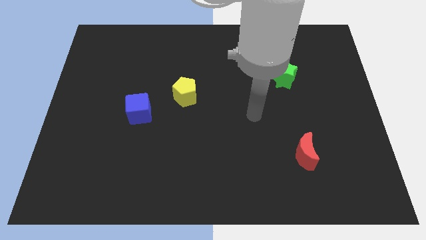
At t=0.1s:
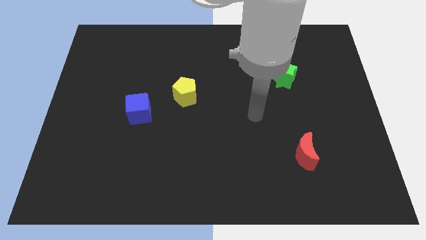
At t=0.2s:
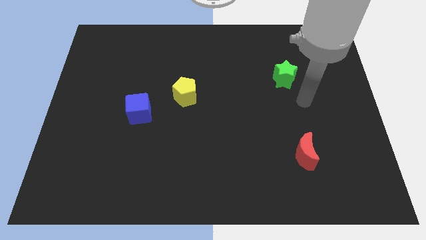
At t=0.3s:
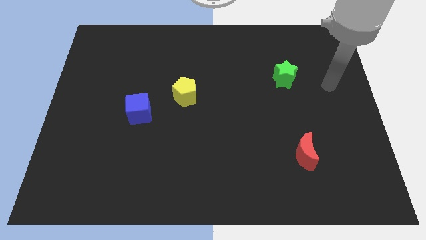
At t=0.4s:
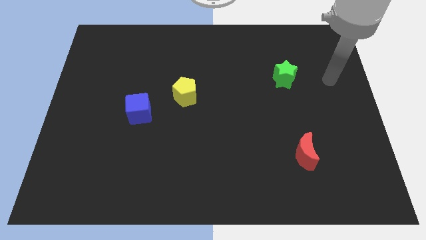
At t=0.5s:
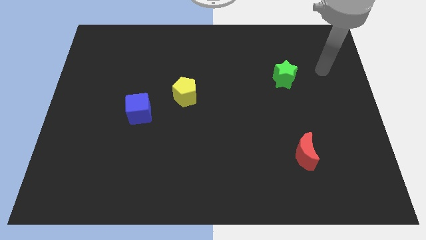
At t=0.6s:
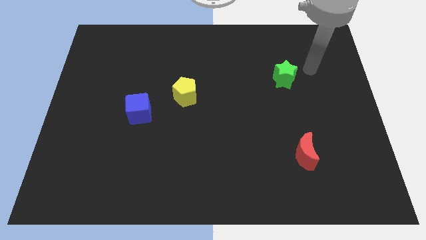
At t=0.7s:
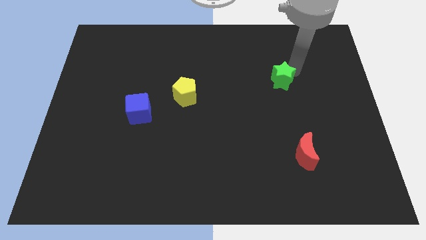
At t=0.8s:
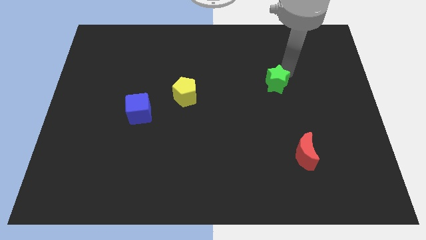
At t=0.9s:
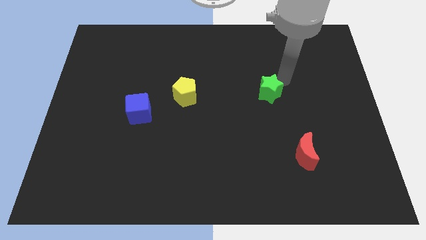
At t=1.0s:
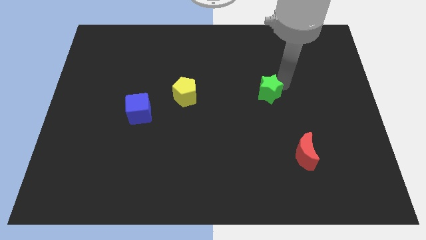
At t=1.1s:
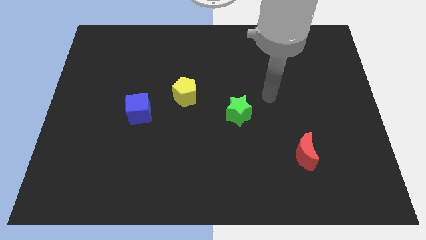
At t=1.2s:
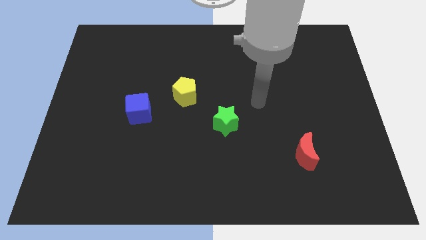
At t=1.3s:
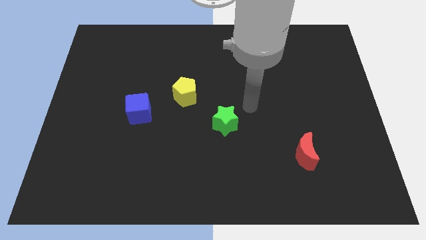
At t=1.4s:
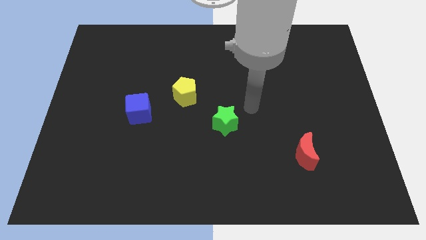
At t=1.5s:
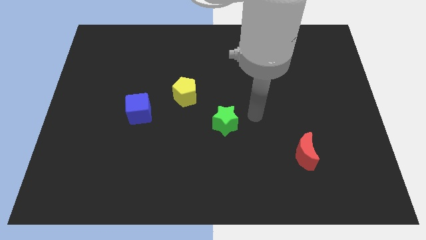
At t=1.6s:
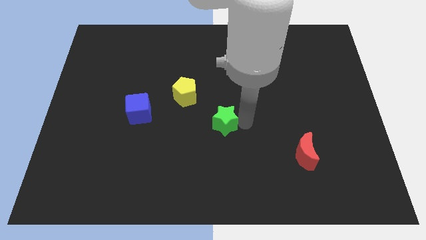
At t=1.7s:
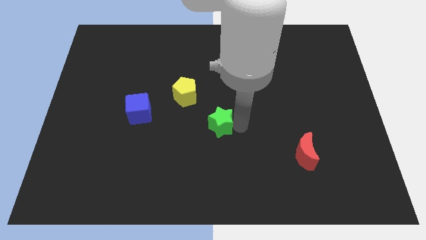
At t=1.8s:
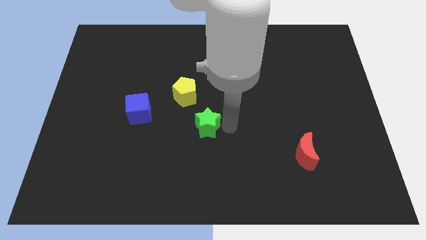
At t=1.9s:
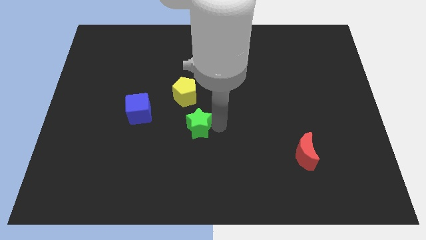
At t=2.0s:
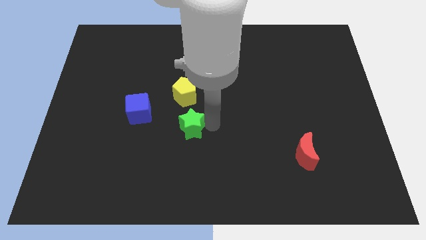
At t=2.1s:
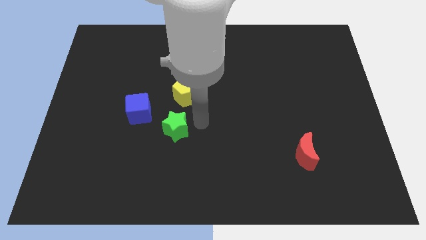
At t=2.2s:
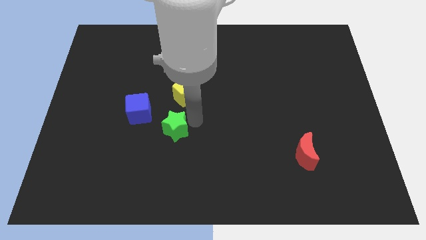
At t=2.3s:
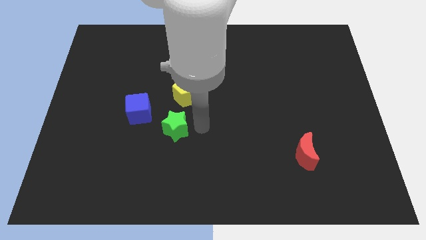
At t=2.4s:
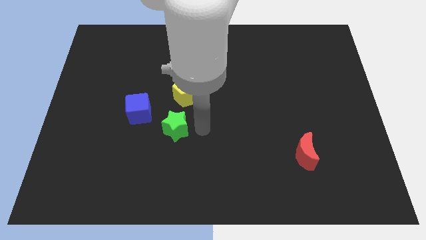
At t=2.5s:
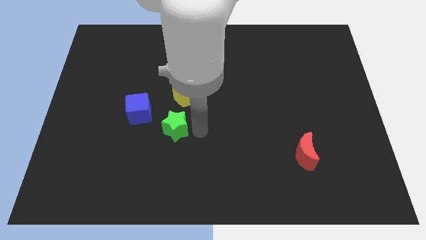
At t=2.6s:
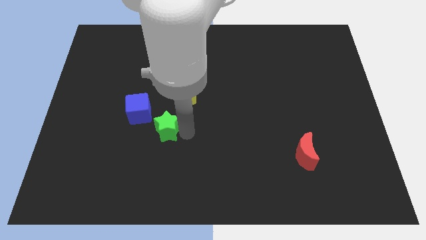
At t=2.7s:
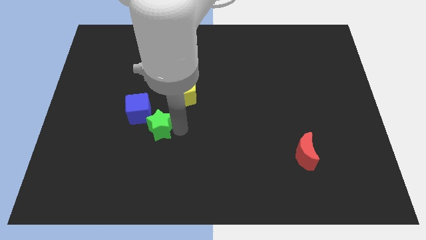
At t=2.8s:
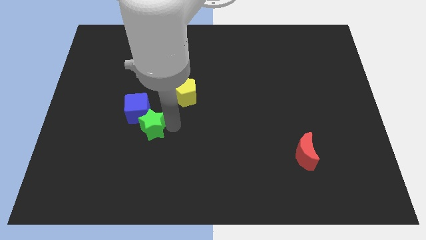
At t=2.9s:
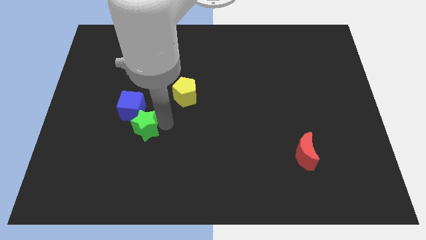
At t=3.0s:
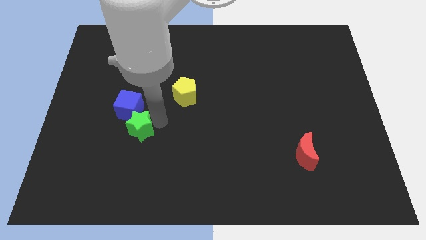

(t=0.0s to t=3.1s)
move the green star to the blue block

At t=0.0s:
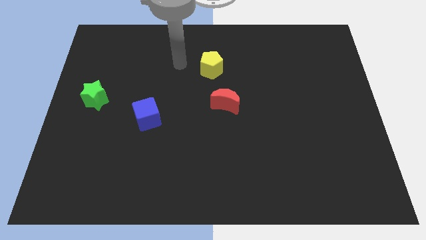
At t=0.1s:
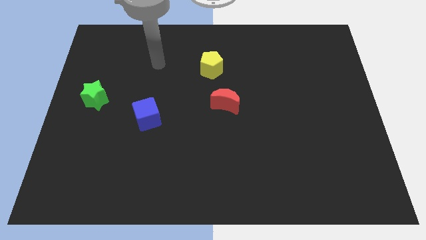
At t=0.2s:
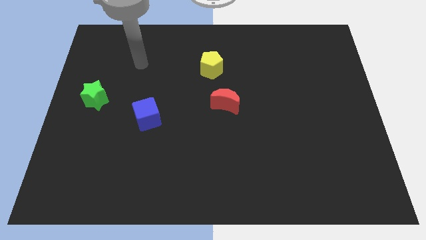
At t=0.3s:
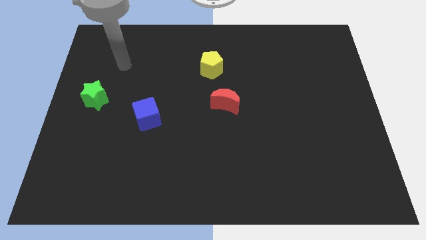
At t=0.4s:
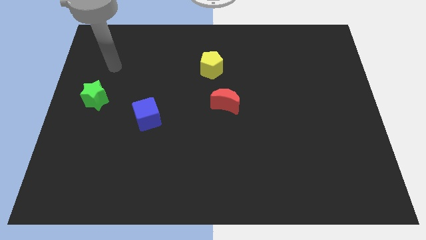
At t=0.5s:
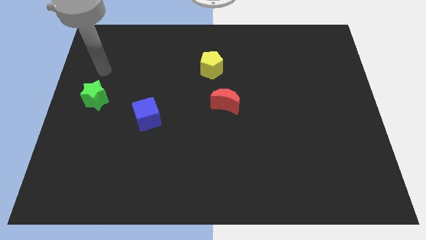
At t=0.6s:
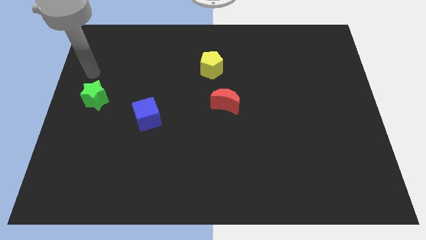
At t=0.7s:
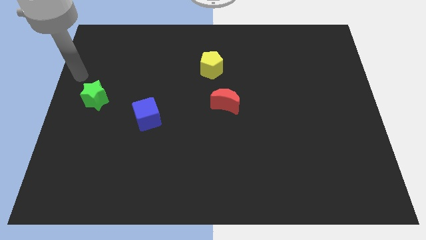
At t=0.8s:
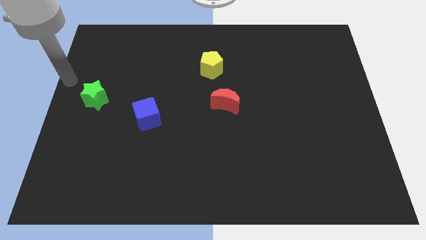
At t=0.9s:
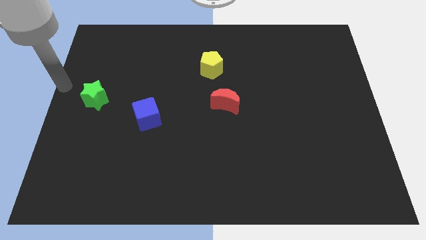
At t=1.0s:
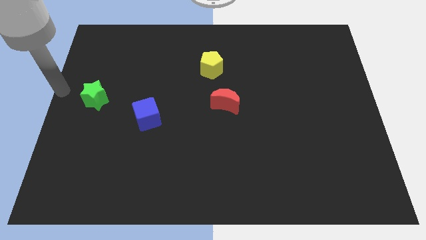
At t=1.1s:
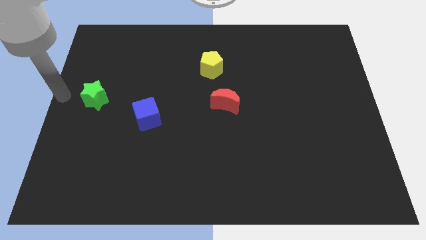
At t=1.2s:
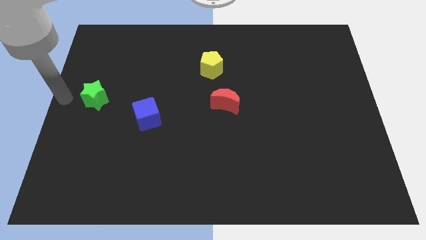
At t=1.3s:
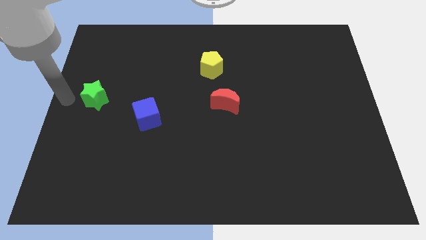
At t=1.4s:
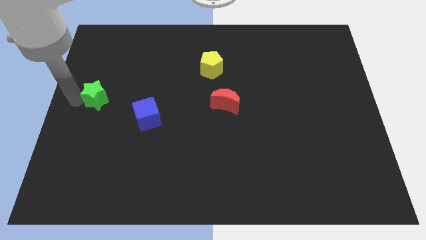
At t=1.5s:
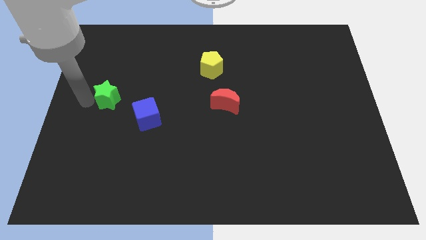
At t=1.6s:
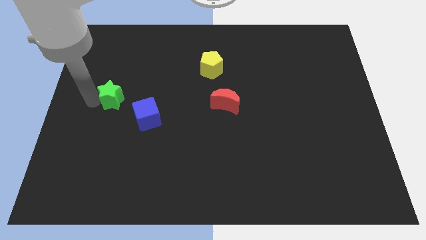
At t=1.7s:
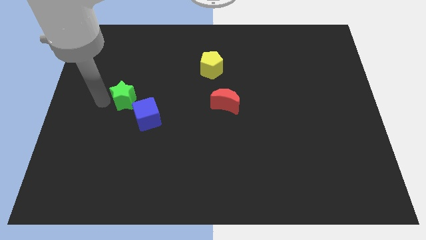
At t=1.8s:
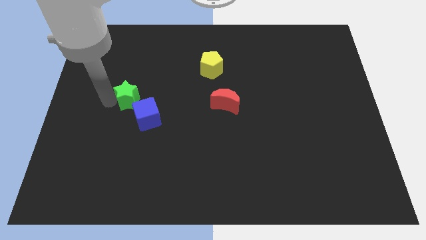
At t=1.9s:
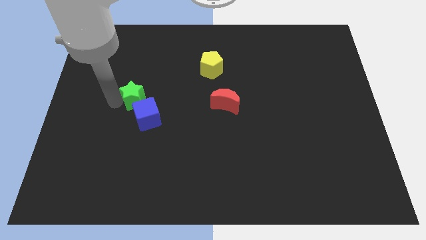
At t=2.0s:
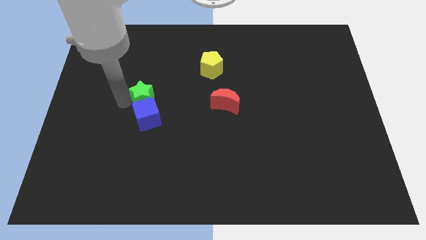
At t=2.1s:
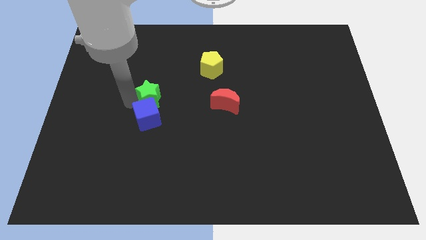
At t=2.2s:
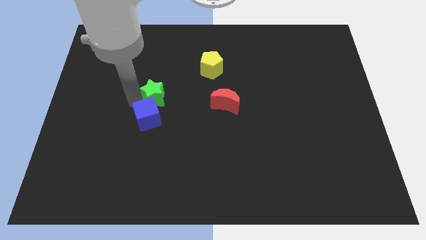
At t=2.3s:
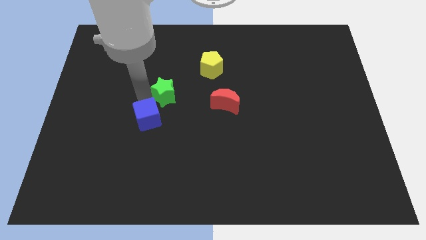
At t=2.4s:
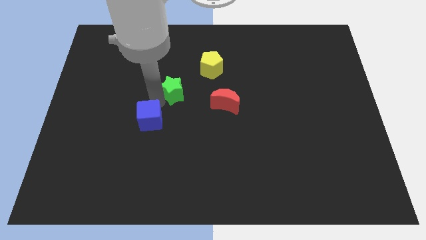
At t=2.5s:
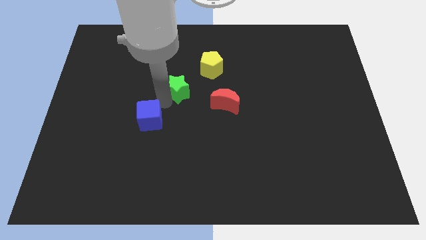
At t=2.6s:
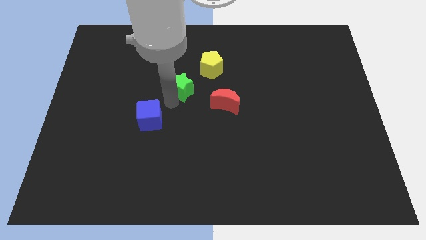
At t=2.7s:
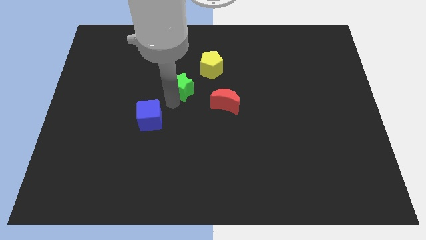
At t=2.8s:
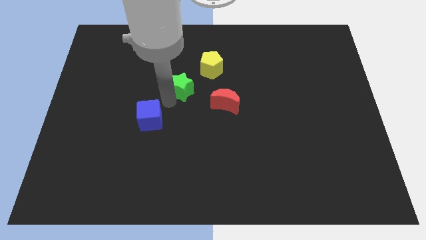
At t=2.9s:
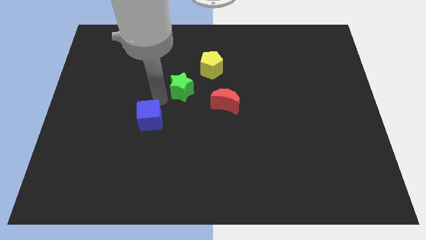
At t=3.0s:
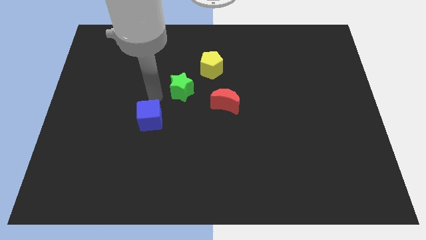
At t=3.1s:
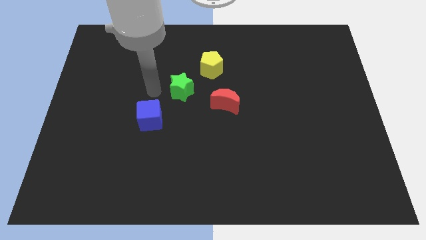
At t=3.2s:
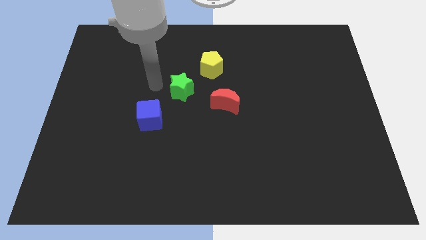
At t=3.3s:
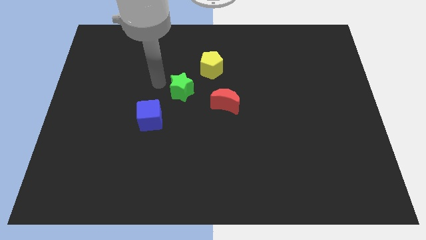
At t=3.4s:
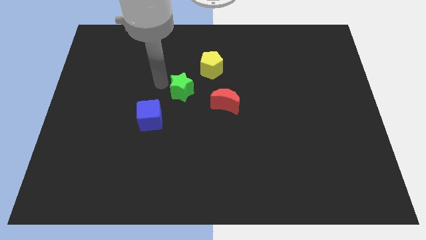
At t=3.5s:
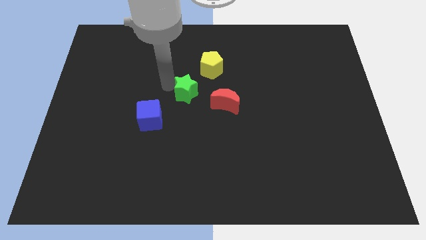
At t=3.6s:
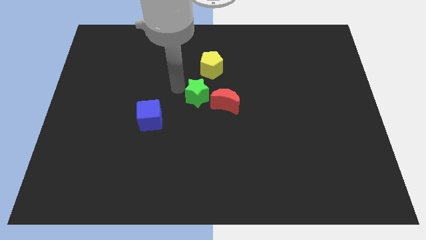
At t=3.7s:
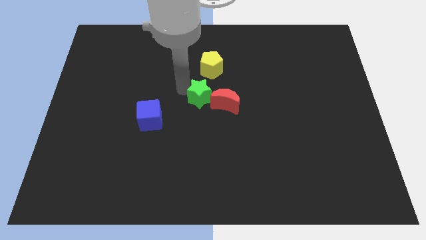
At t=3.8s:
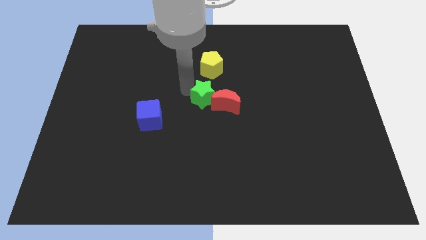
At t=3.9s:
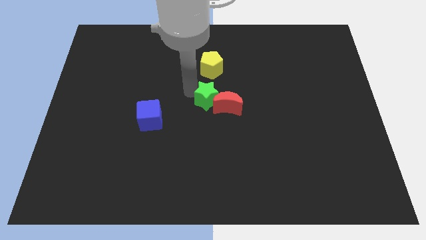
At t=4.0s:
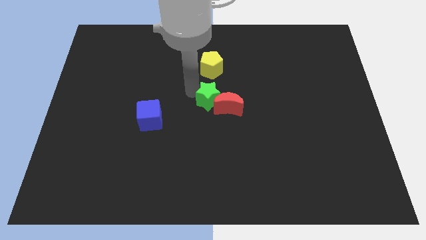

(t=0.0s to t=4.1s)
slide the star close to the red block

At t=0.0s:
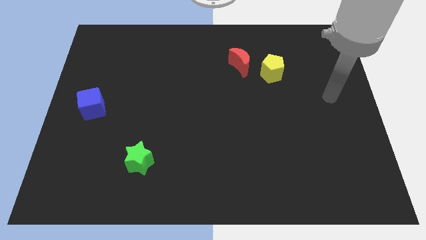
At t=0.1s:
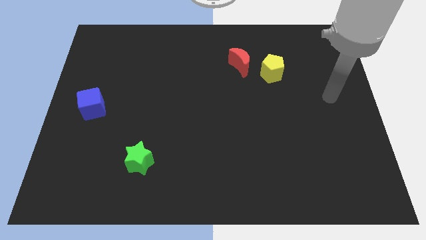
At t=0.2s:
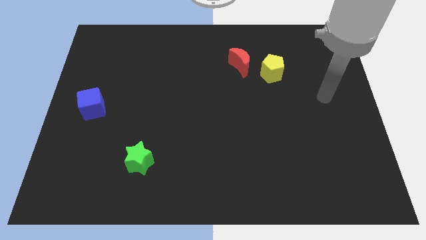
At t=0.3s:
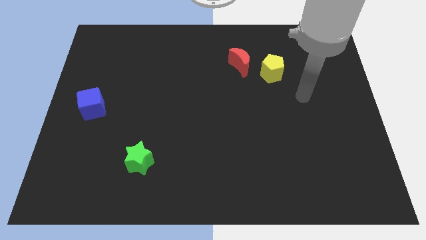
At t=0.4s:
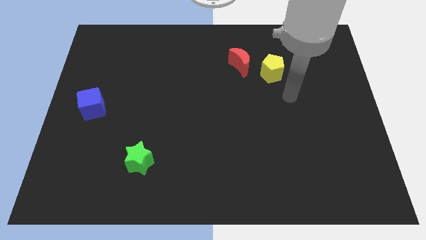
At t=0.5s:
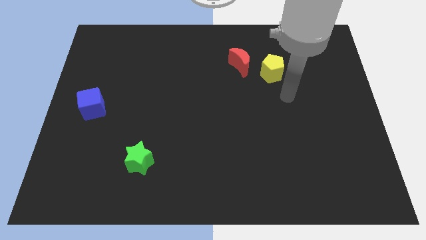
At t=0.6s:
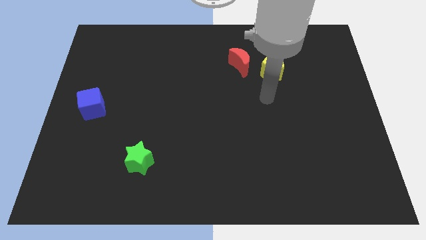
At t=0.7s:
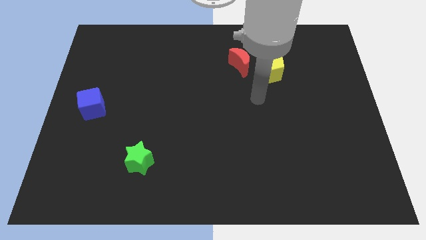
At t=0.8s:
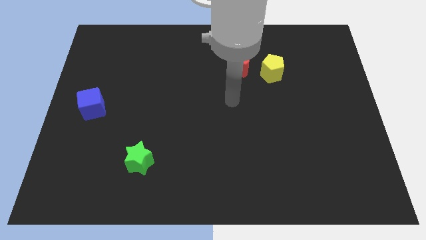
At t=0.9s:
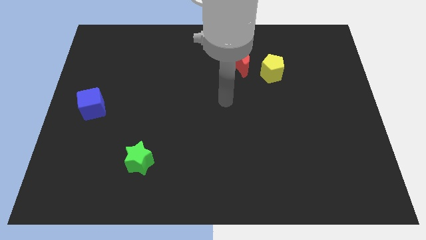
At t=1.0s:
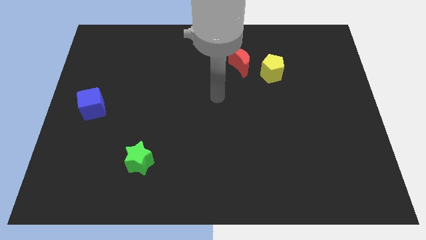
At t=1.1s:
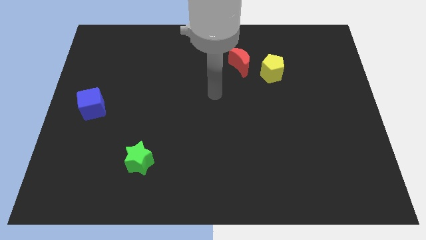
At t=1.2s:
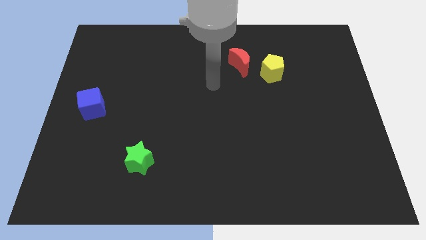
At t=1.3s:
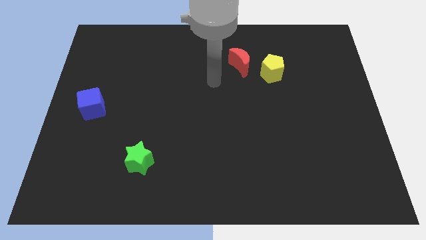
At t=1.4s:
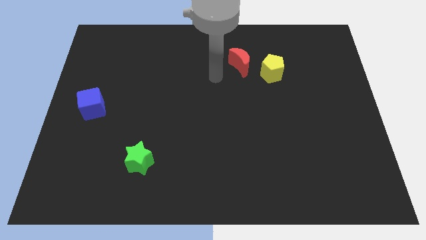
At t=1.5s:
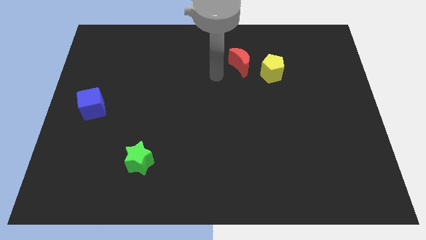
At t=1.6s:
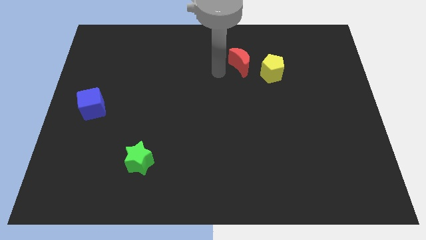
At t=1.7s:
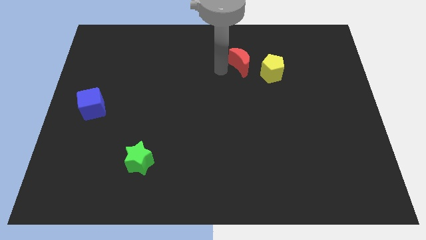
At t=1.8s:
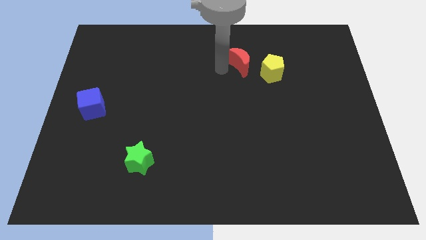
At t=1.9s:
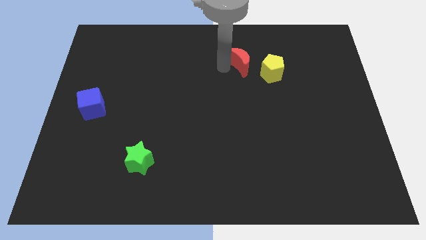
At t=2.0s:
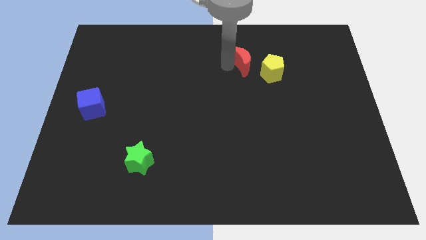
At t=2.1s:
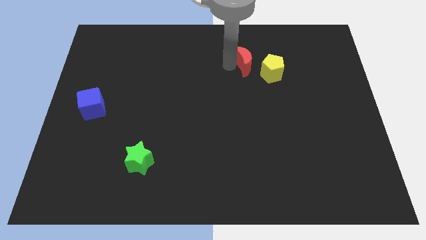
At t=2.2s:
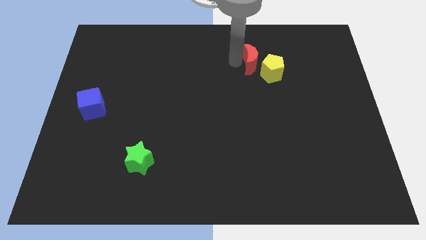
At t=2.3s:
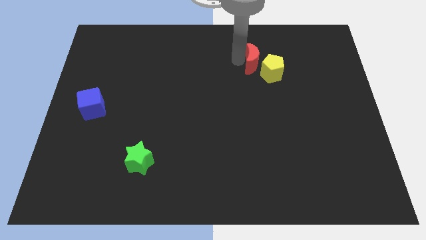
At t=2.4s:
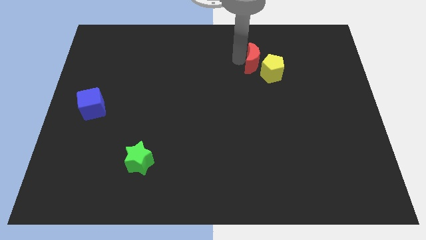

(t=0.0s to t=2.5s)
push the red block close to the yellow block
